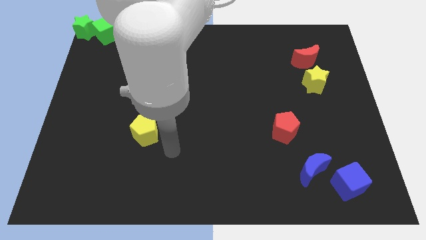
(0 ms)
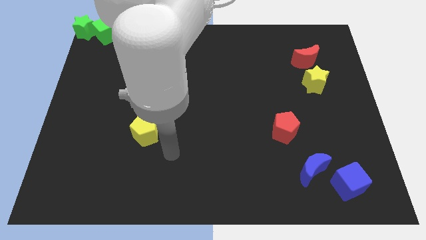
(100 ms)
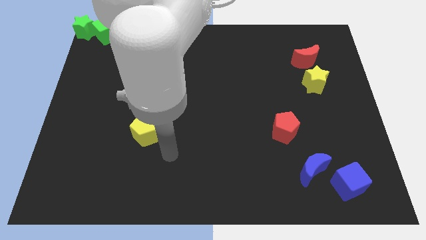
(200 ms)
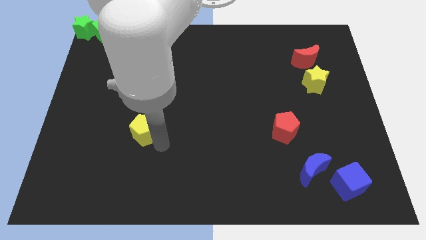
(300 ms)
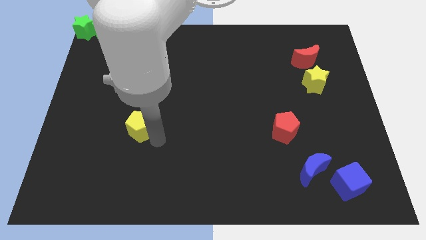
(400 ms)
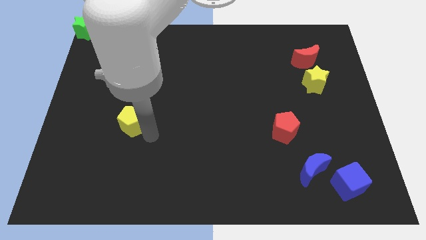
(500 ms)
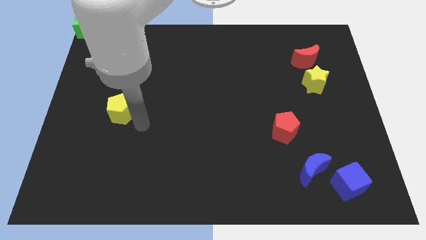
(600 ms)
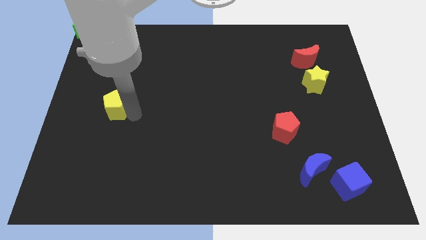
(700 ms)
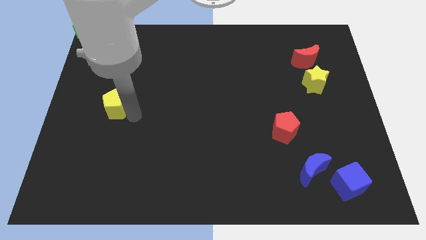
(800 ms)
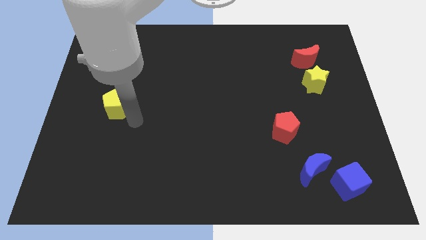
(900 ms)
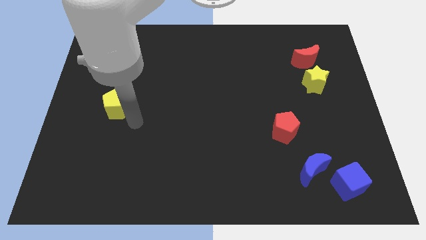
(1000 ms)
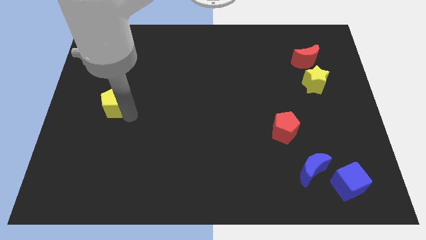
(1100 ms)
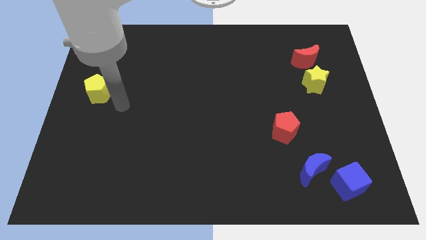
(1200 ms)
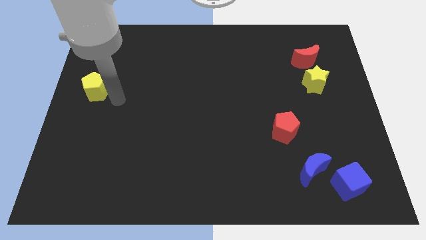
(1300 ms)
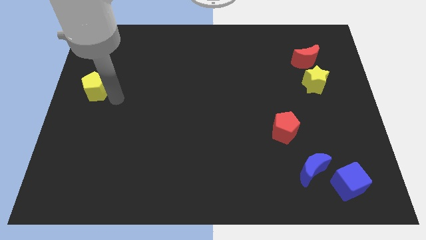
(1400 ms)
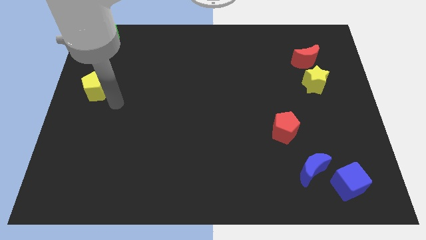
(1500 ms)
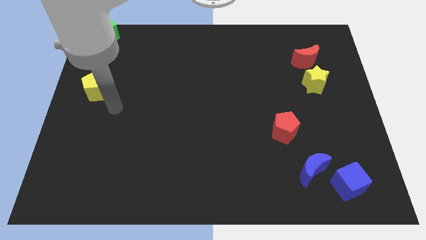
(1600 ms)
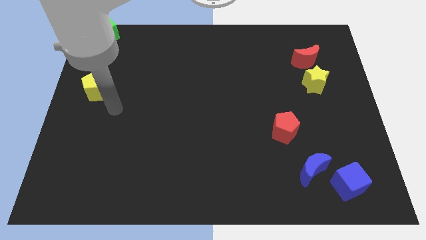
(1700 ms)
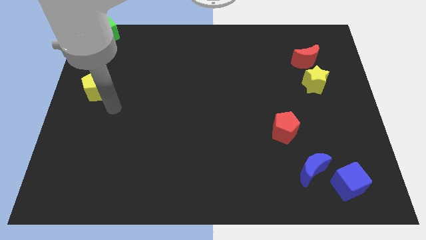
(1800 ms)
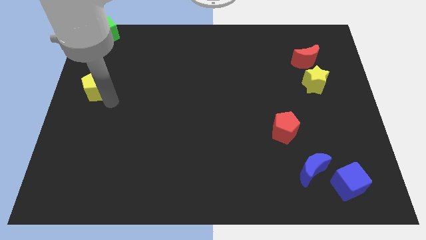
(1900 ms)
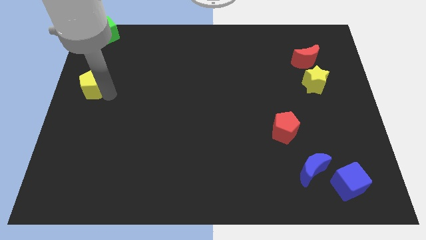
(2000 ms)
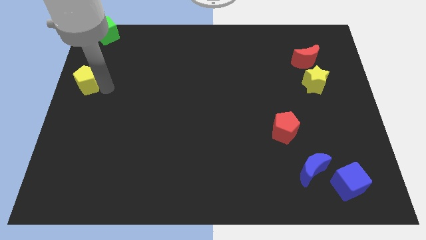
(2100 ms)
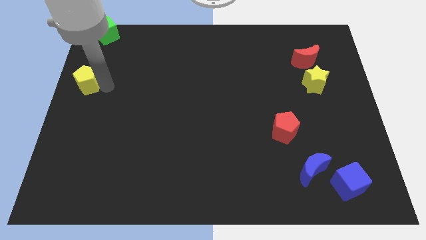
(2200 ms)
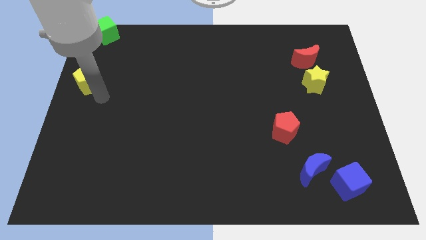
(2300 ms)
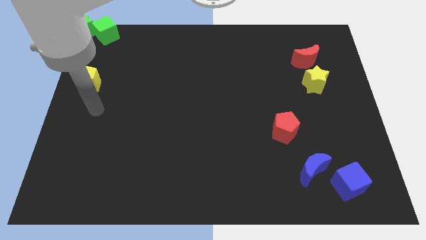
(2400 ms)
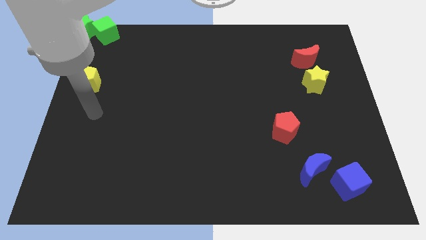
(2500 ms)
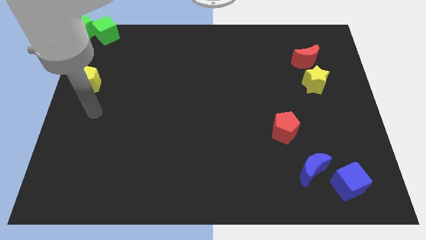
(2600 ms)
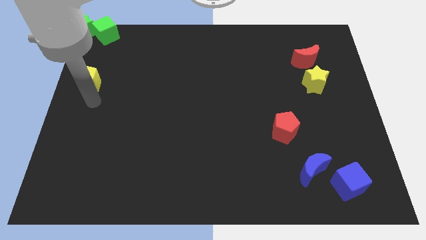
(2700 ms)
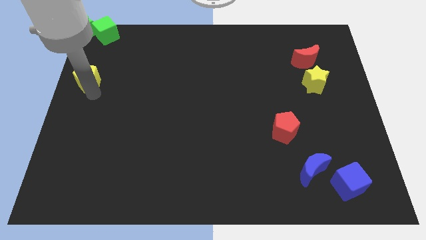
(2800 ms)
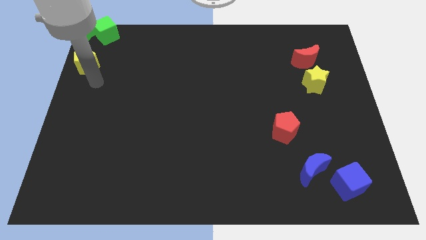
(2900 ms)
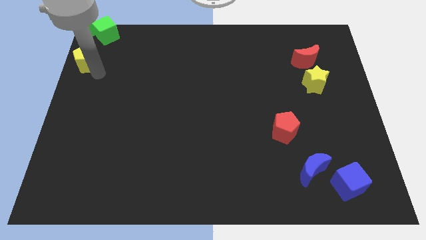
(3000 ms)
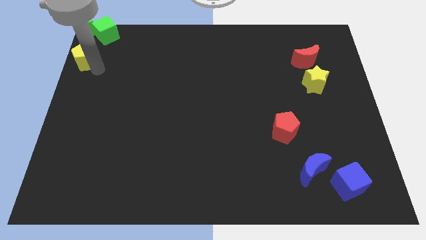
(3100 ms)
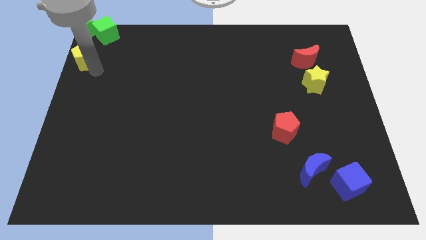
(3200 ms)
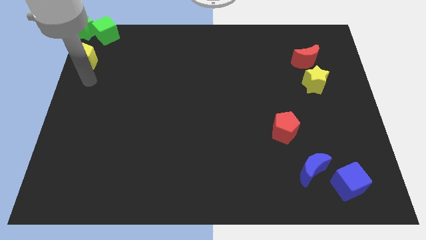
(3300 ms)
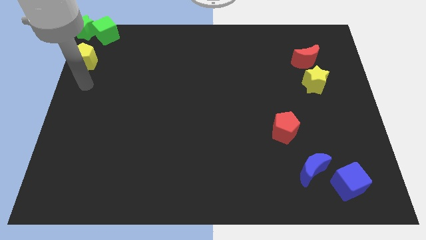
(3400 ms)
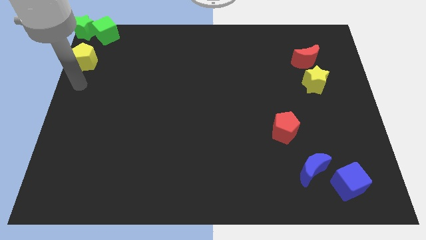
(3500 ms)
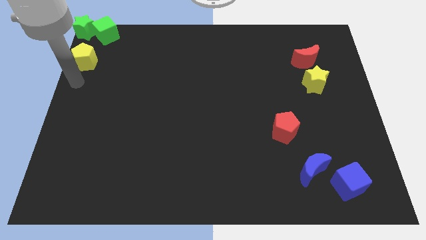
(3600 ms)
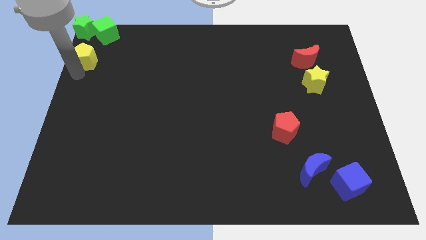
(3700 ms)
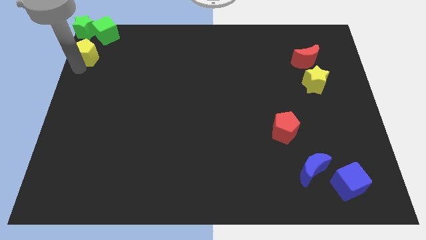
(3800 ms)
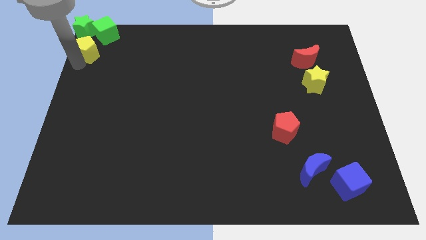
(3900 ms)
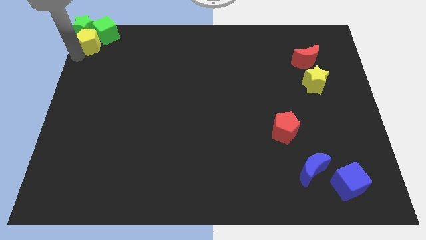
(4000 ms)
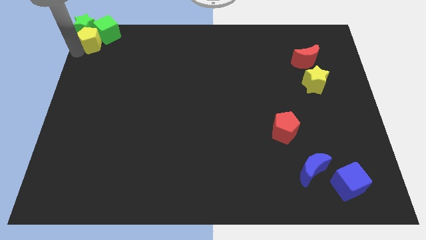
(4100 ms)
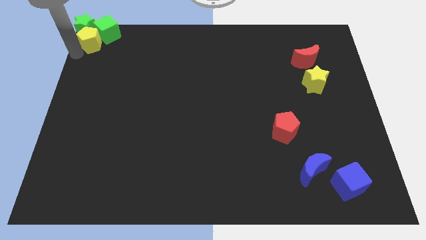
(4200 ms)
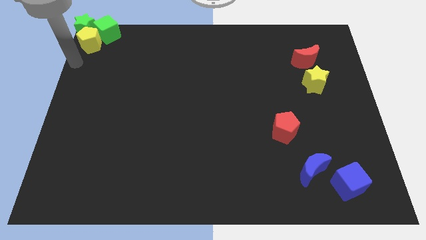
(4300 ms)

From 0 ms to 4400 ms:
put the yellow pentagon at the top left corner

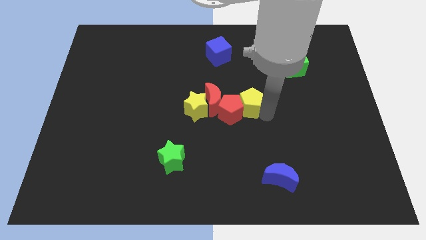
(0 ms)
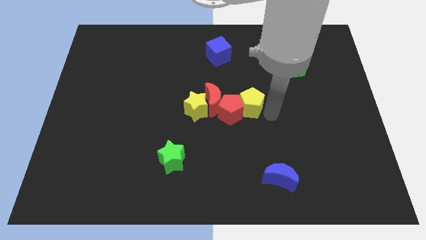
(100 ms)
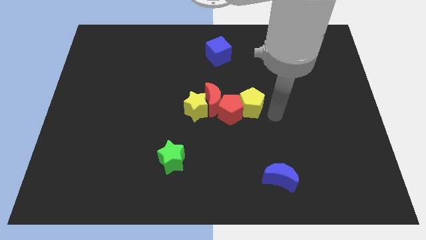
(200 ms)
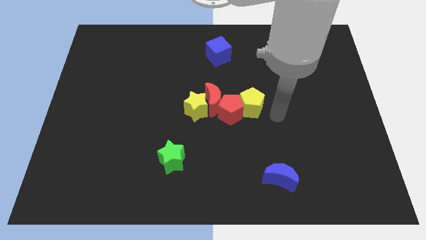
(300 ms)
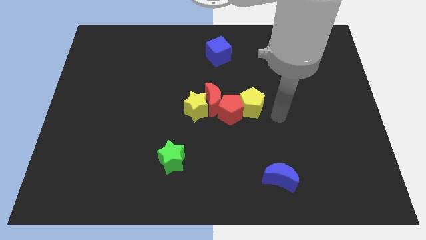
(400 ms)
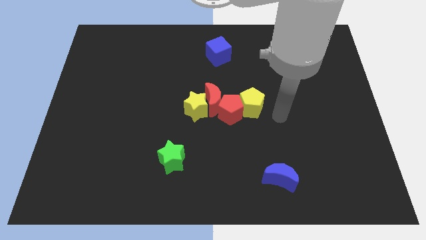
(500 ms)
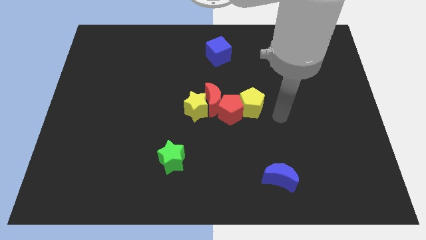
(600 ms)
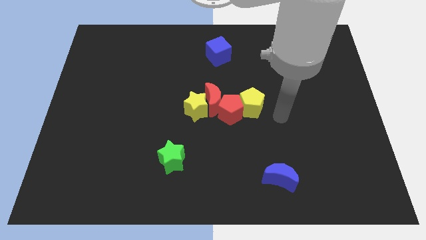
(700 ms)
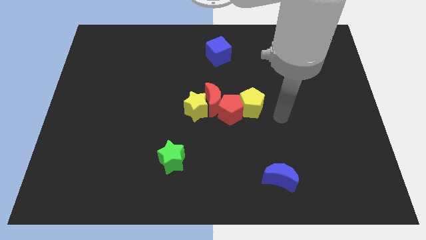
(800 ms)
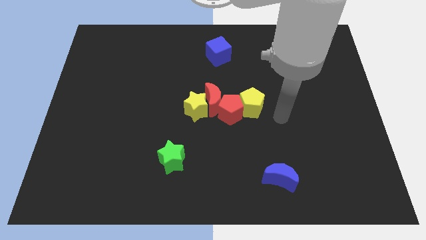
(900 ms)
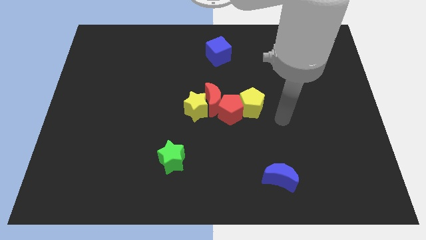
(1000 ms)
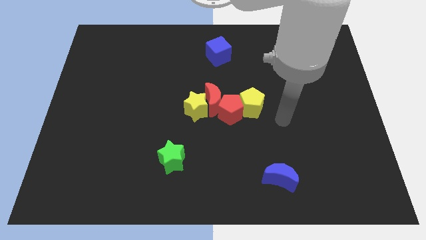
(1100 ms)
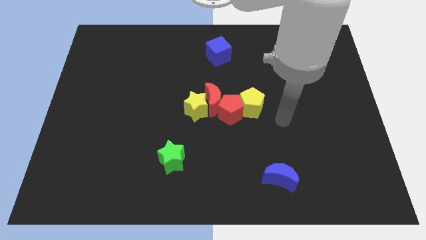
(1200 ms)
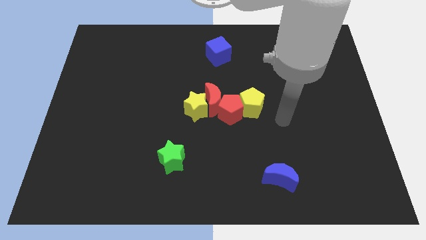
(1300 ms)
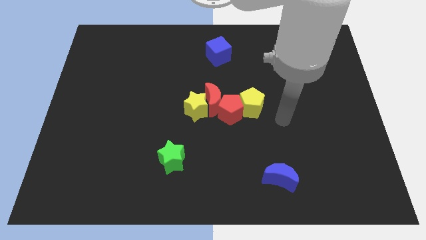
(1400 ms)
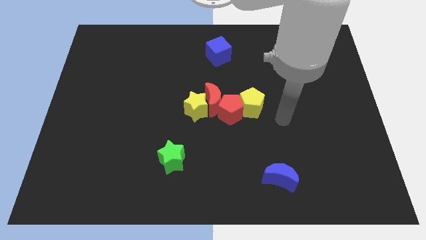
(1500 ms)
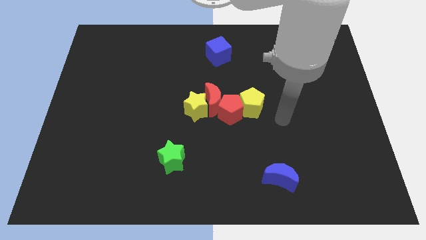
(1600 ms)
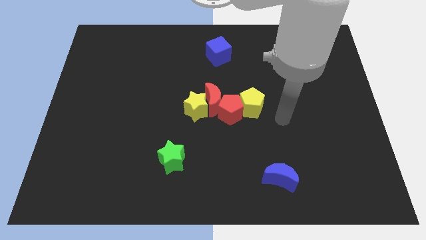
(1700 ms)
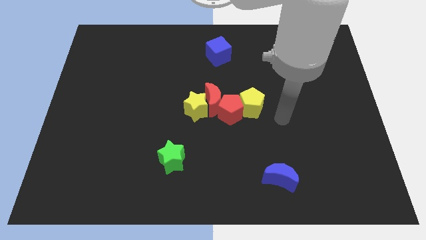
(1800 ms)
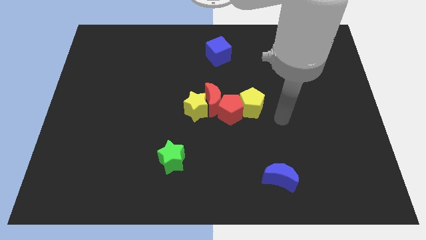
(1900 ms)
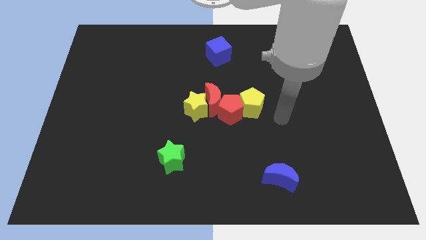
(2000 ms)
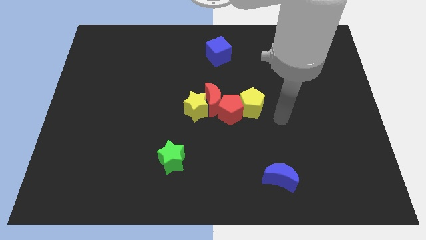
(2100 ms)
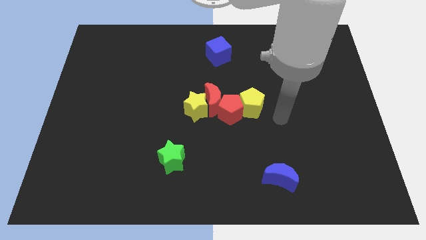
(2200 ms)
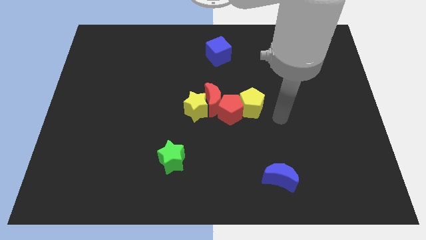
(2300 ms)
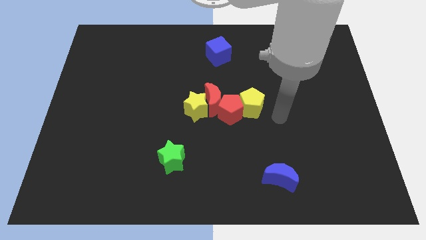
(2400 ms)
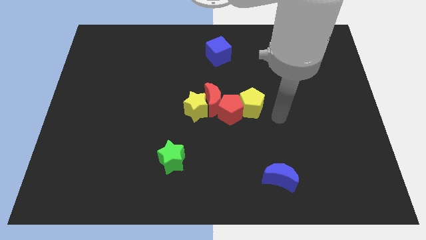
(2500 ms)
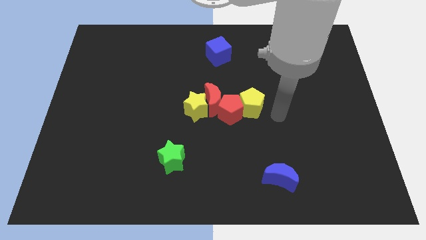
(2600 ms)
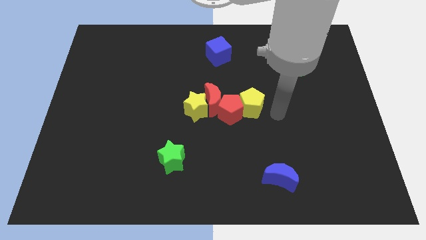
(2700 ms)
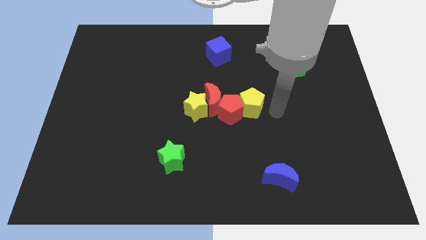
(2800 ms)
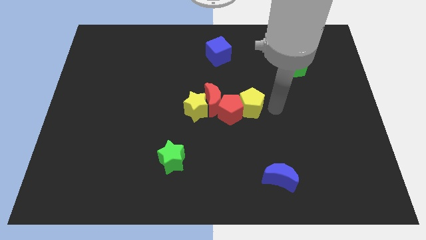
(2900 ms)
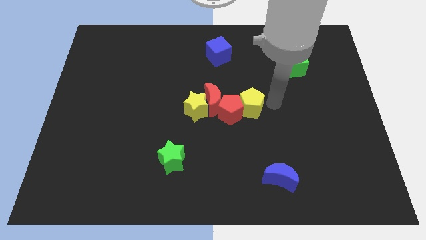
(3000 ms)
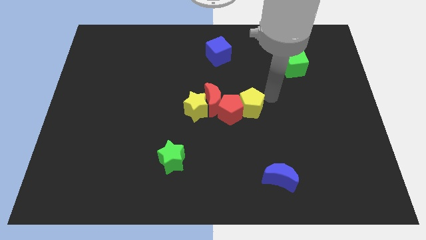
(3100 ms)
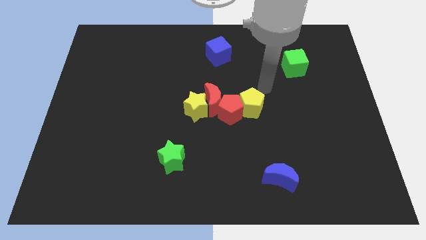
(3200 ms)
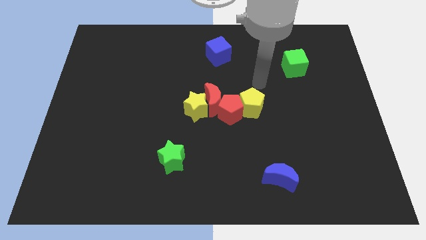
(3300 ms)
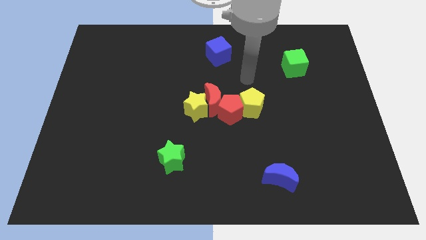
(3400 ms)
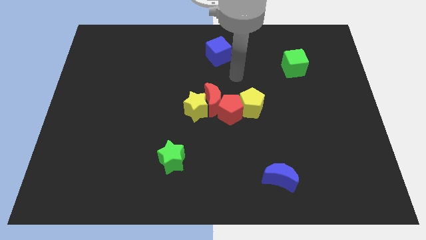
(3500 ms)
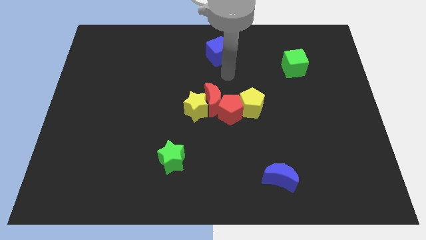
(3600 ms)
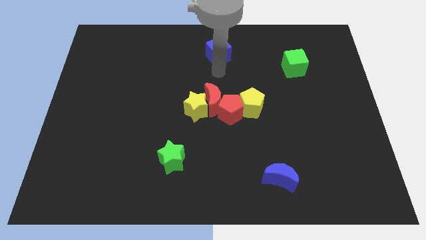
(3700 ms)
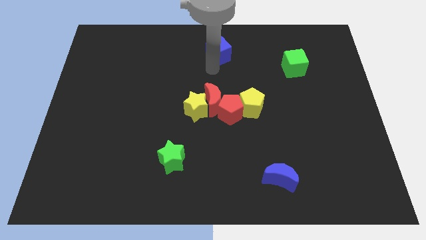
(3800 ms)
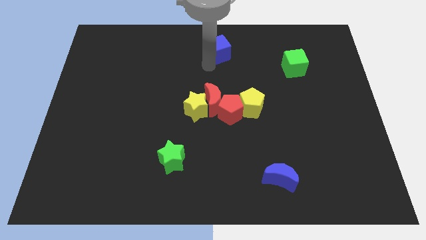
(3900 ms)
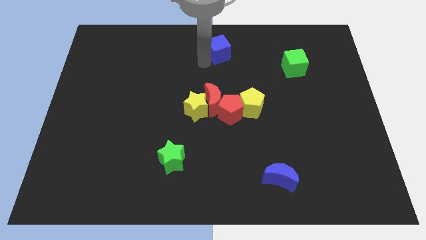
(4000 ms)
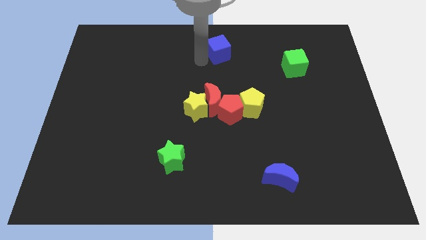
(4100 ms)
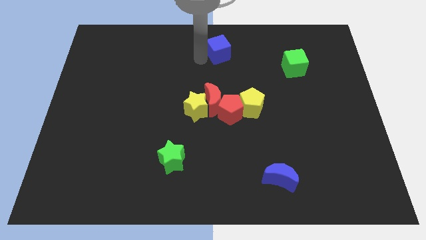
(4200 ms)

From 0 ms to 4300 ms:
place your arm to the left of blue cube
